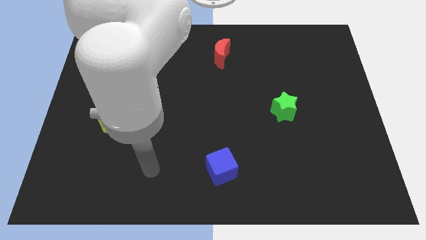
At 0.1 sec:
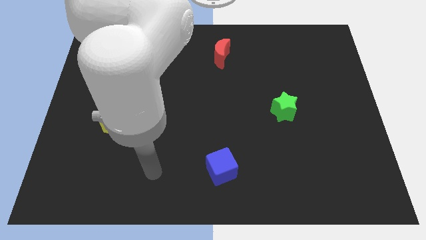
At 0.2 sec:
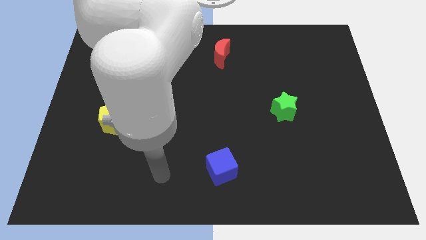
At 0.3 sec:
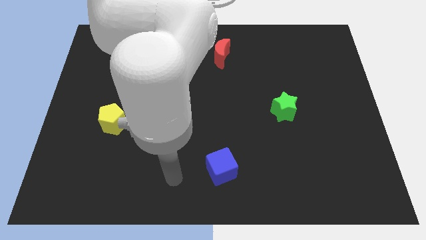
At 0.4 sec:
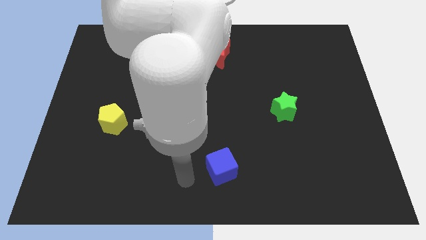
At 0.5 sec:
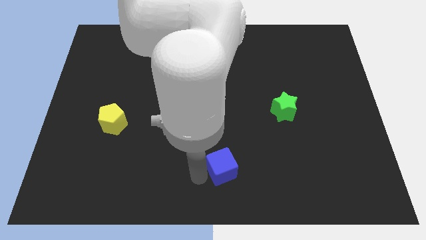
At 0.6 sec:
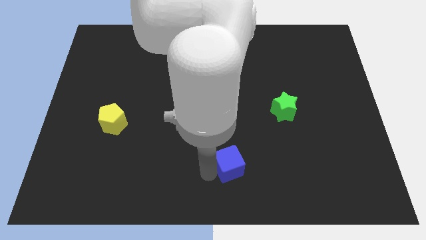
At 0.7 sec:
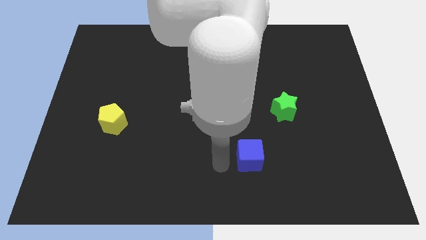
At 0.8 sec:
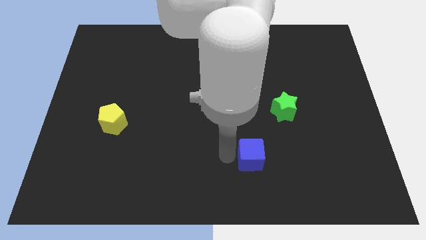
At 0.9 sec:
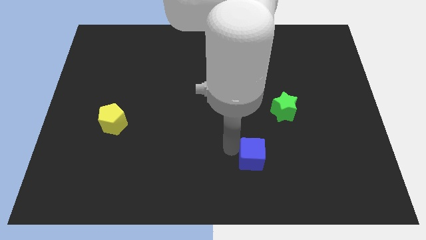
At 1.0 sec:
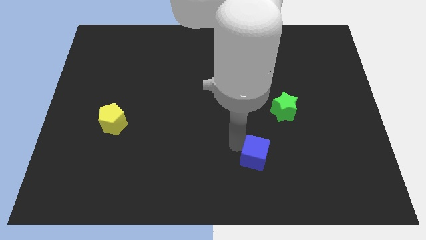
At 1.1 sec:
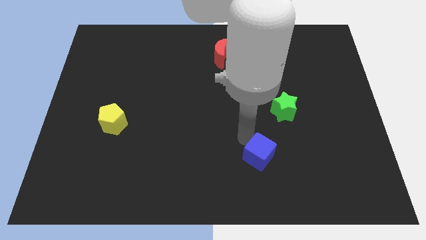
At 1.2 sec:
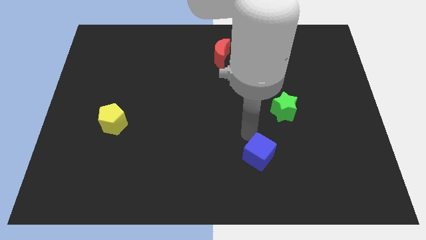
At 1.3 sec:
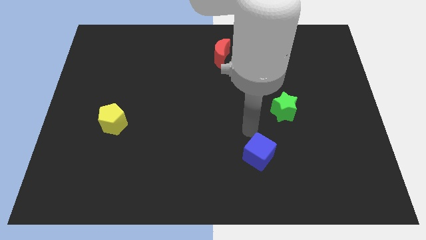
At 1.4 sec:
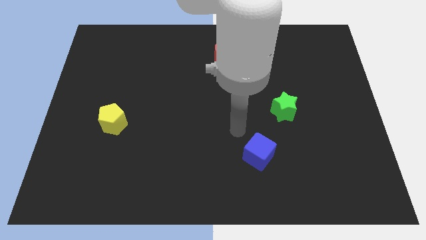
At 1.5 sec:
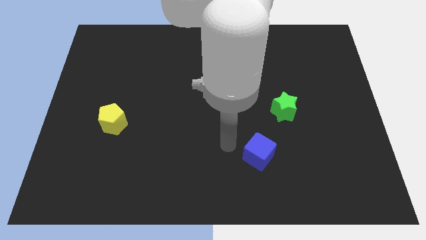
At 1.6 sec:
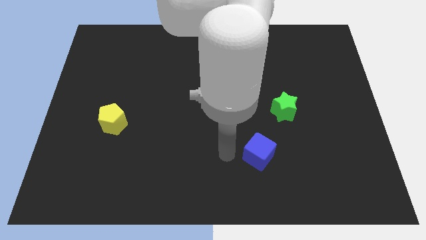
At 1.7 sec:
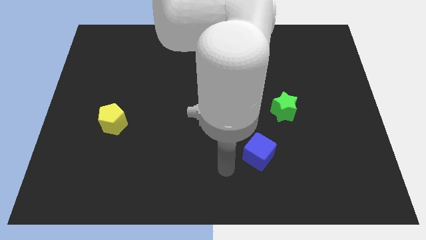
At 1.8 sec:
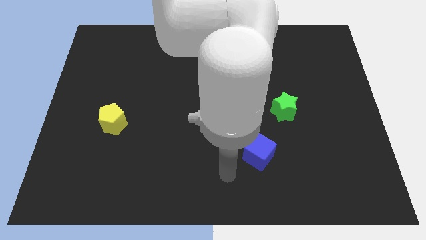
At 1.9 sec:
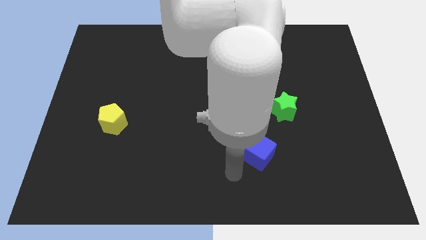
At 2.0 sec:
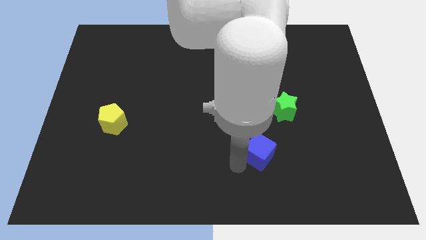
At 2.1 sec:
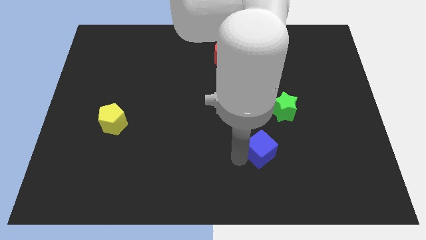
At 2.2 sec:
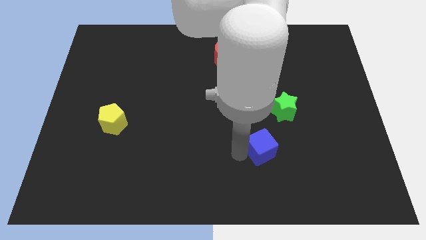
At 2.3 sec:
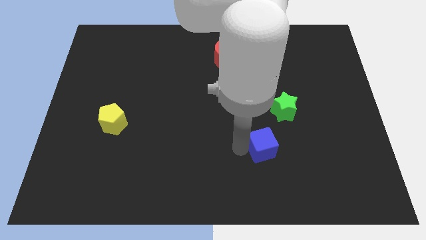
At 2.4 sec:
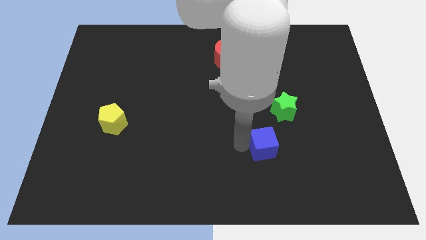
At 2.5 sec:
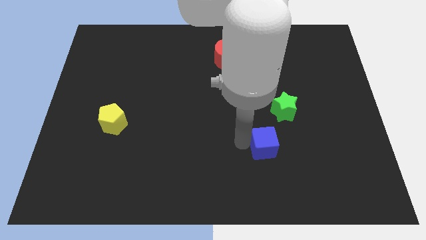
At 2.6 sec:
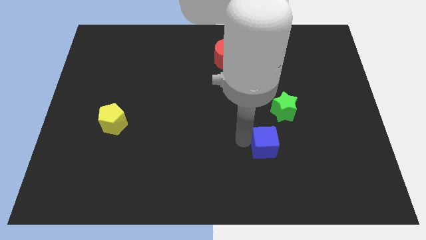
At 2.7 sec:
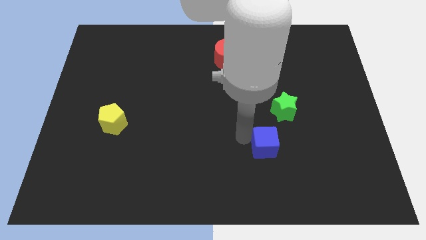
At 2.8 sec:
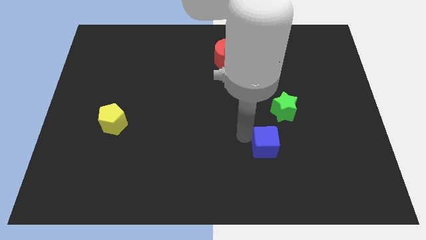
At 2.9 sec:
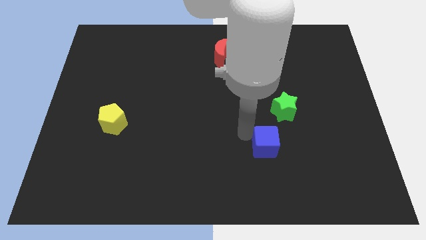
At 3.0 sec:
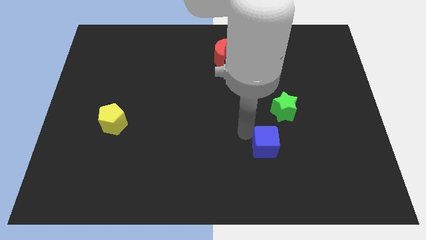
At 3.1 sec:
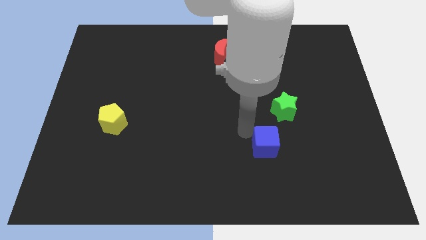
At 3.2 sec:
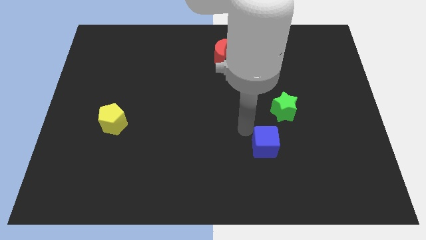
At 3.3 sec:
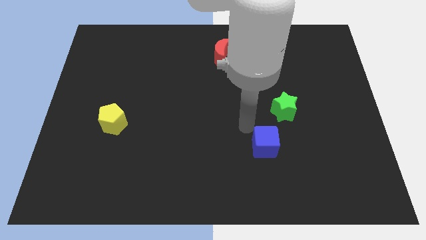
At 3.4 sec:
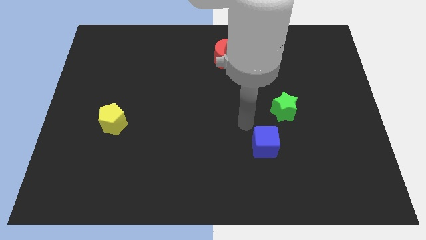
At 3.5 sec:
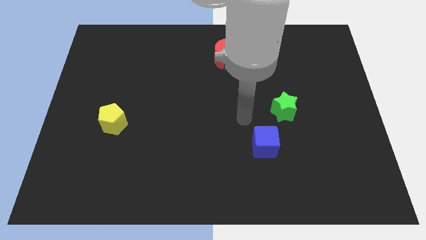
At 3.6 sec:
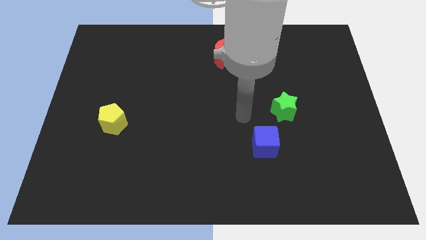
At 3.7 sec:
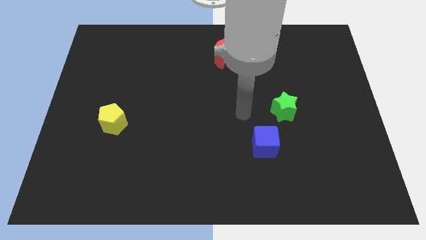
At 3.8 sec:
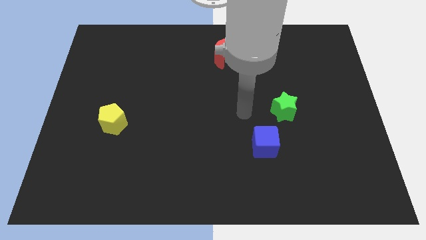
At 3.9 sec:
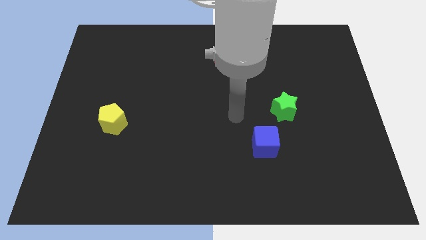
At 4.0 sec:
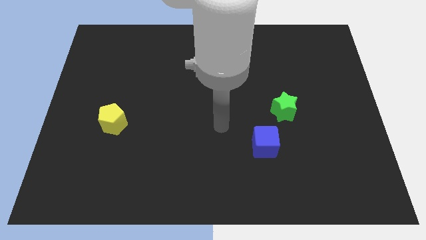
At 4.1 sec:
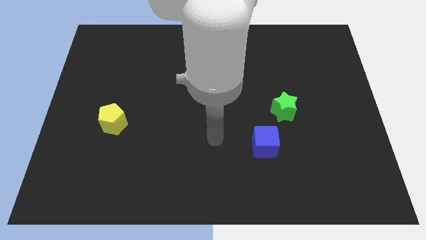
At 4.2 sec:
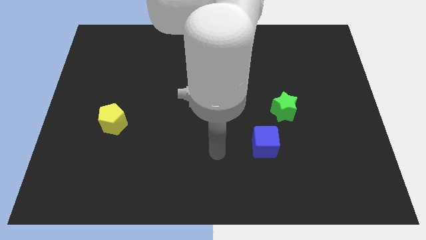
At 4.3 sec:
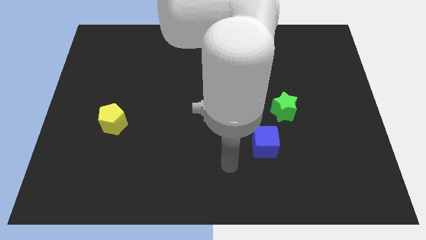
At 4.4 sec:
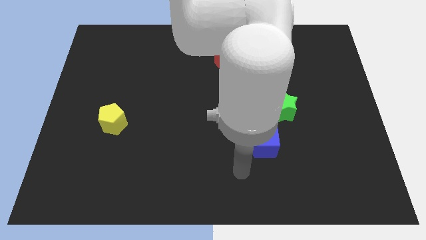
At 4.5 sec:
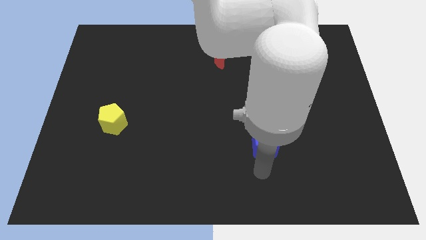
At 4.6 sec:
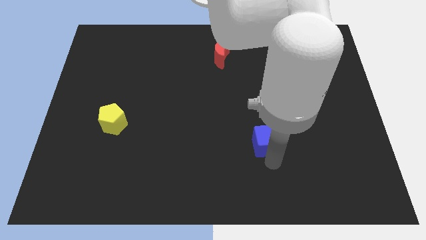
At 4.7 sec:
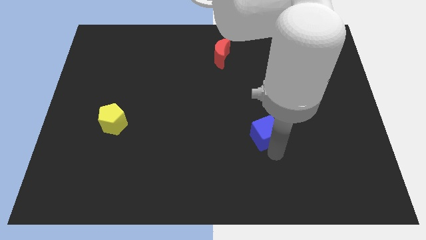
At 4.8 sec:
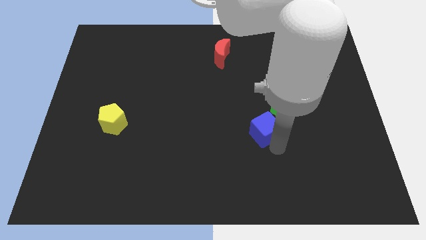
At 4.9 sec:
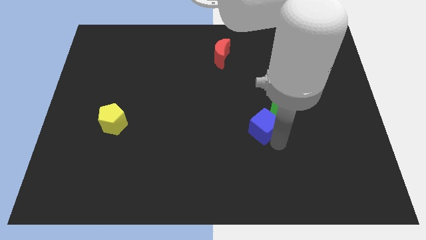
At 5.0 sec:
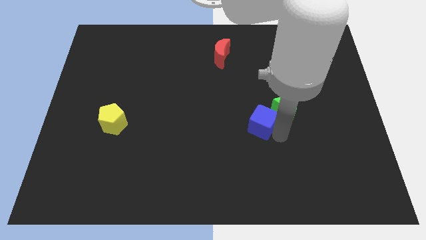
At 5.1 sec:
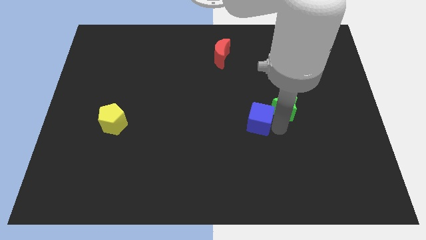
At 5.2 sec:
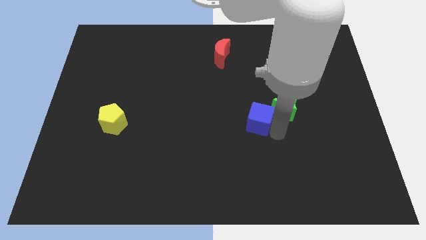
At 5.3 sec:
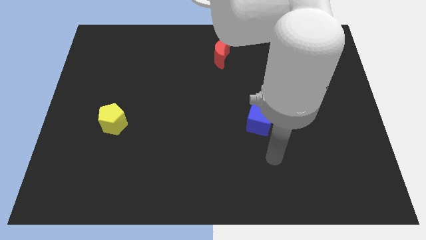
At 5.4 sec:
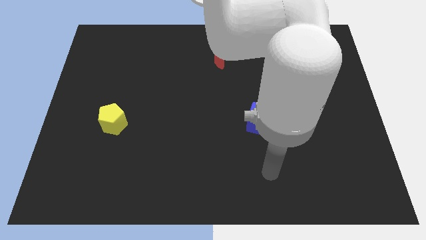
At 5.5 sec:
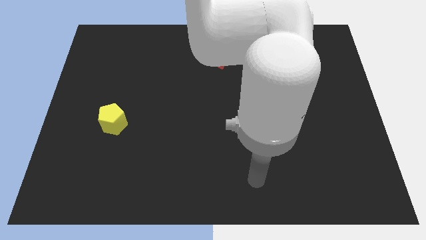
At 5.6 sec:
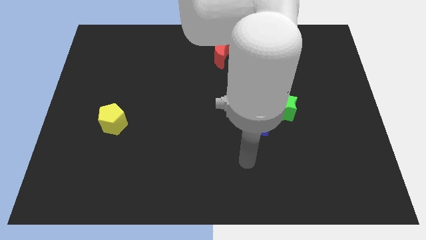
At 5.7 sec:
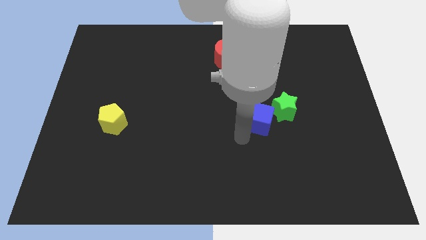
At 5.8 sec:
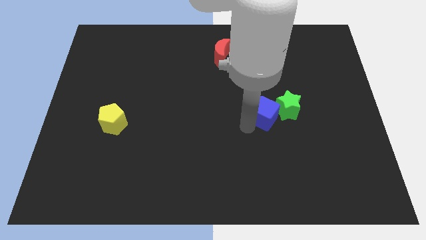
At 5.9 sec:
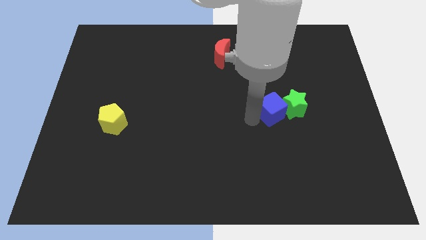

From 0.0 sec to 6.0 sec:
push the blue block towards the star

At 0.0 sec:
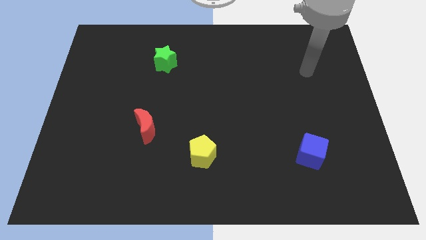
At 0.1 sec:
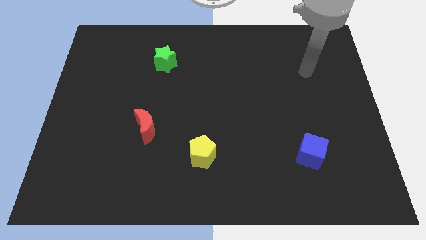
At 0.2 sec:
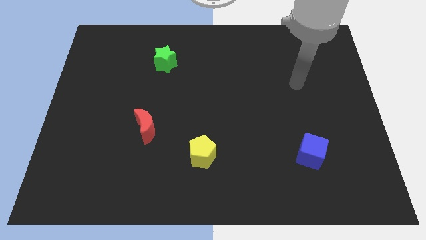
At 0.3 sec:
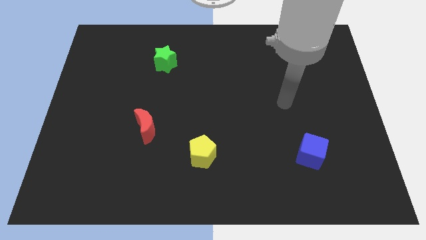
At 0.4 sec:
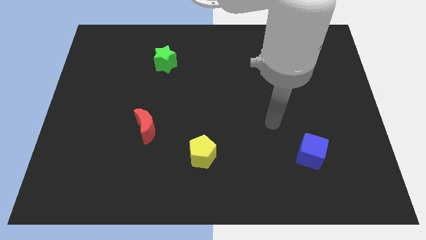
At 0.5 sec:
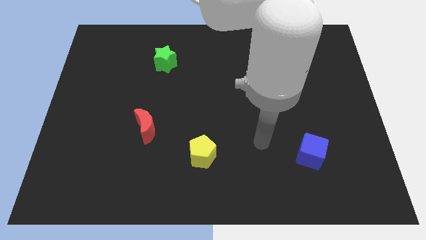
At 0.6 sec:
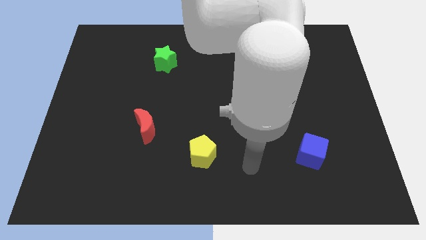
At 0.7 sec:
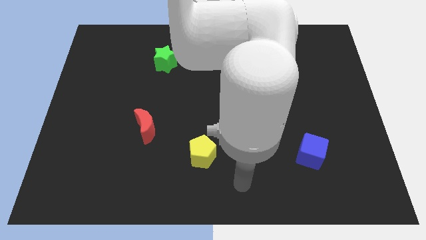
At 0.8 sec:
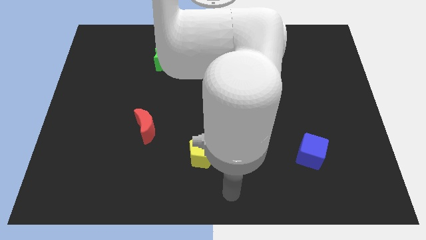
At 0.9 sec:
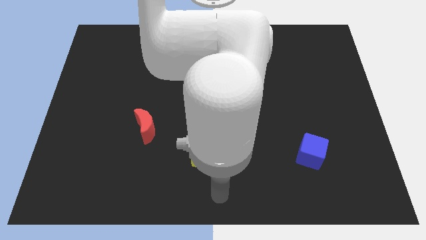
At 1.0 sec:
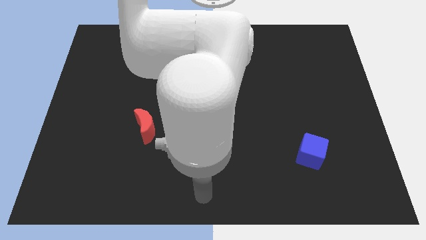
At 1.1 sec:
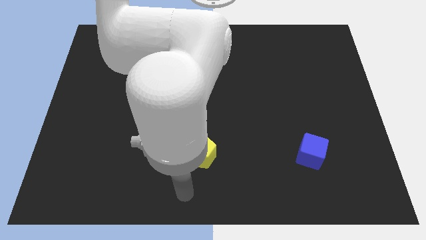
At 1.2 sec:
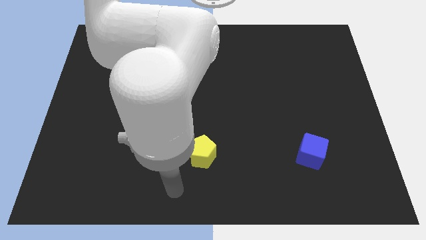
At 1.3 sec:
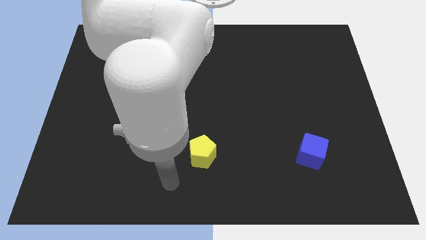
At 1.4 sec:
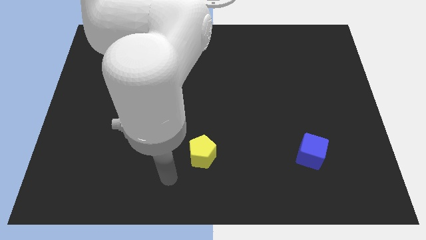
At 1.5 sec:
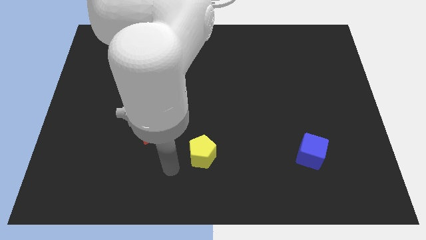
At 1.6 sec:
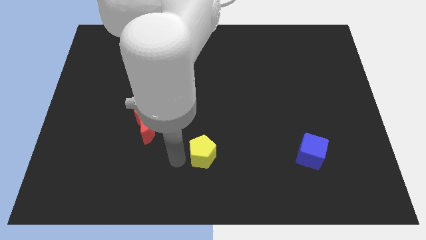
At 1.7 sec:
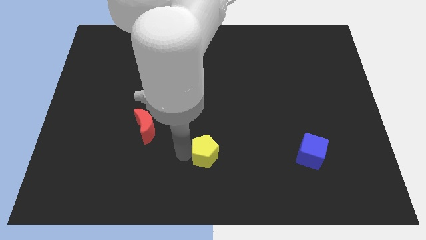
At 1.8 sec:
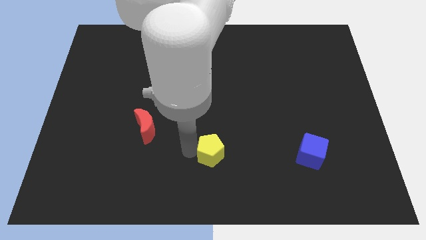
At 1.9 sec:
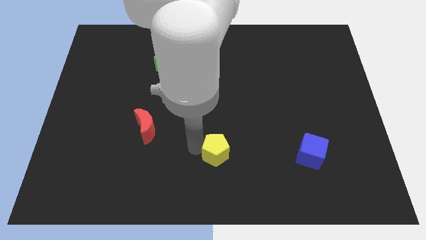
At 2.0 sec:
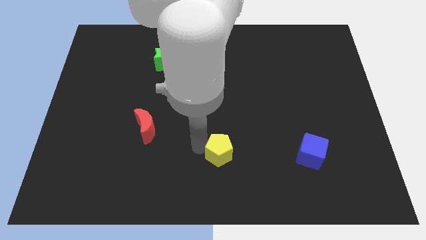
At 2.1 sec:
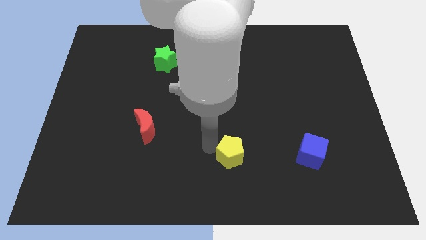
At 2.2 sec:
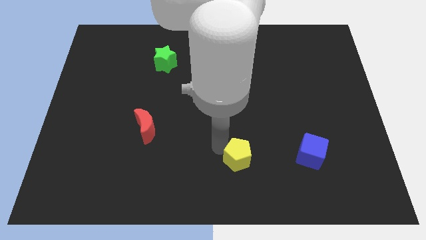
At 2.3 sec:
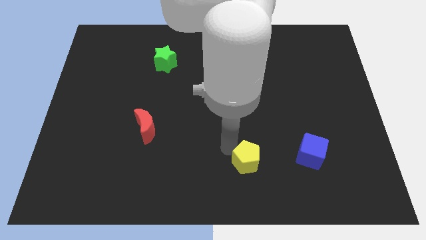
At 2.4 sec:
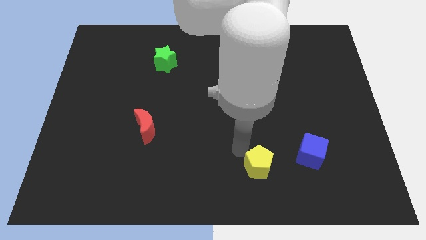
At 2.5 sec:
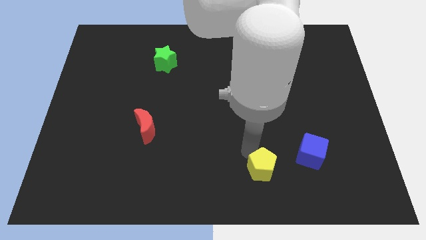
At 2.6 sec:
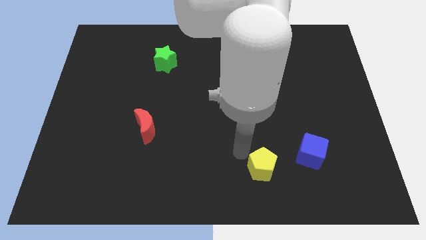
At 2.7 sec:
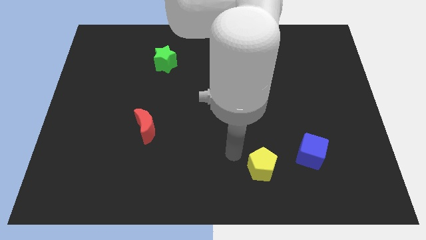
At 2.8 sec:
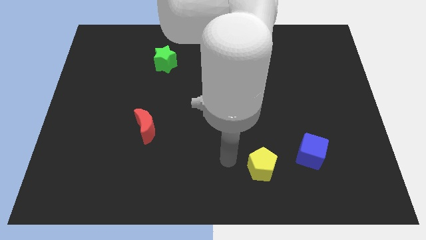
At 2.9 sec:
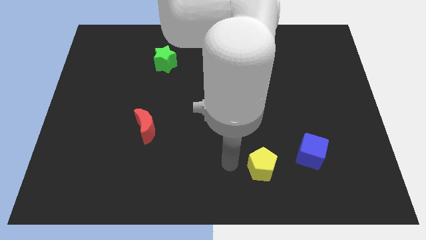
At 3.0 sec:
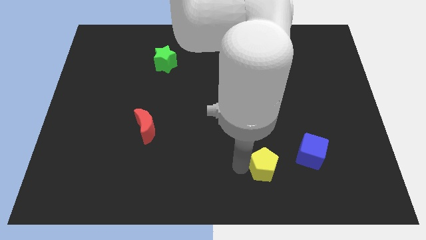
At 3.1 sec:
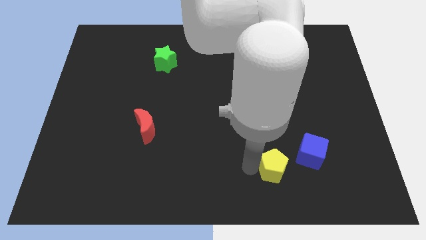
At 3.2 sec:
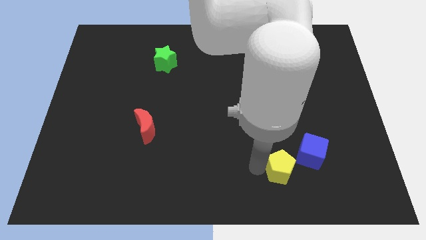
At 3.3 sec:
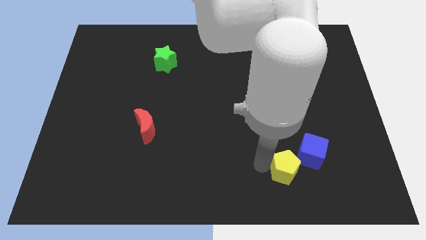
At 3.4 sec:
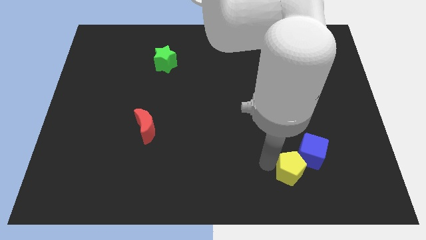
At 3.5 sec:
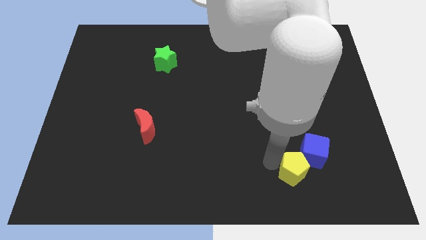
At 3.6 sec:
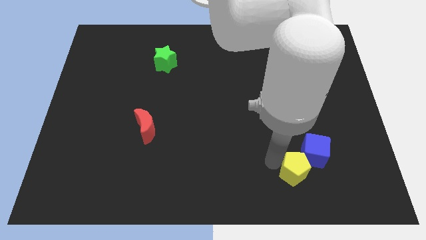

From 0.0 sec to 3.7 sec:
push the yellow pentagon to the blue cube
